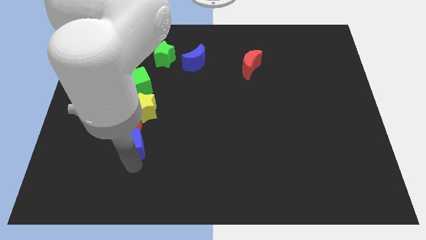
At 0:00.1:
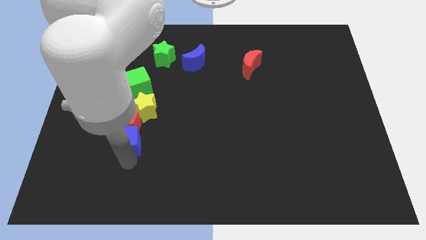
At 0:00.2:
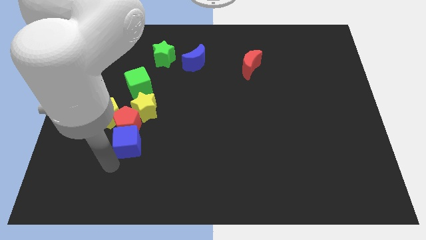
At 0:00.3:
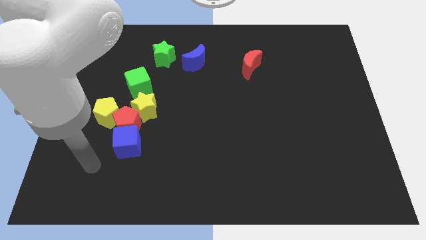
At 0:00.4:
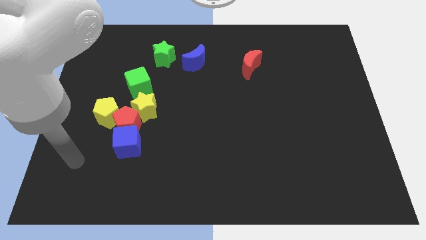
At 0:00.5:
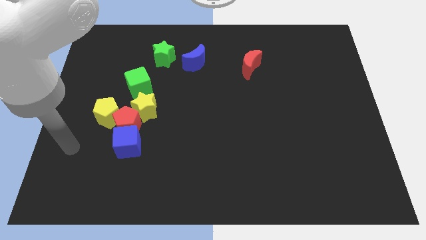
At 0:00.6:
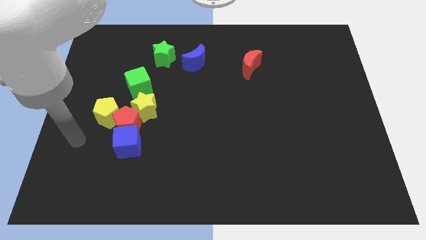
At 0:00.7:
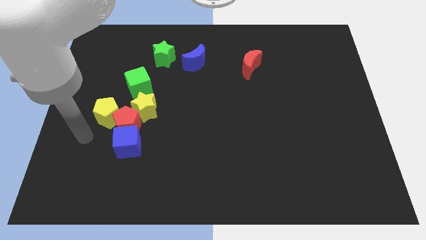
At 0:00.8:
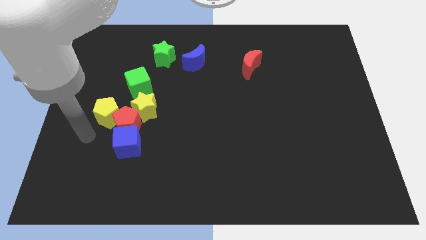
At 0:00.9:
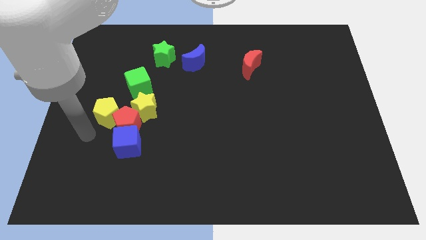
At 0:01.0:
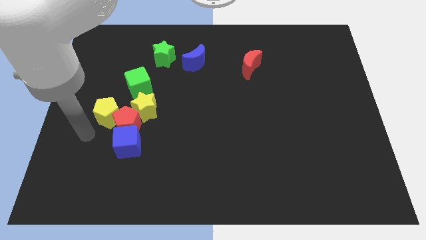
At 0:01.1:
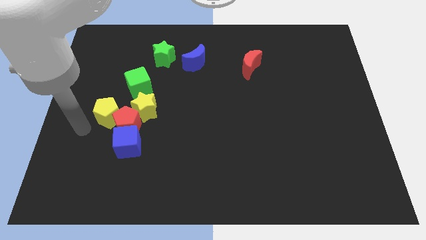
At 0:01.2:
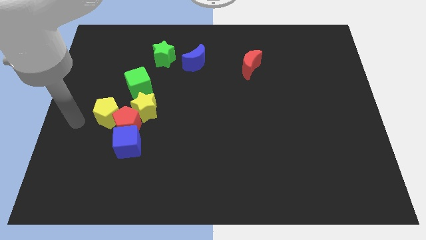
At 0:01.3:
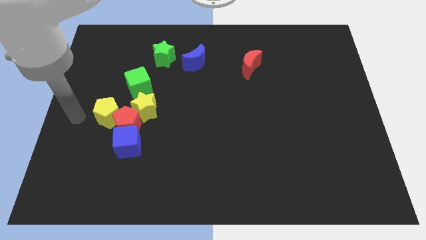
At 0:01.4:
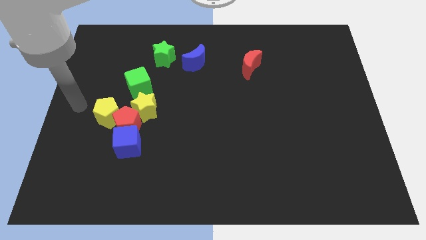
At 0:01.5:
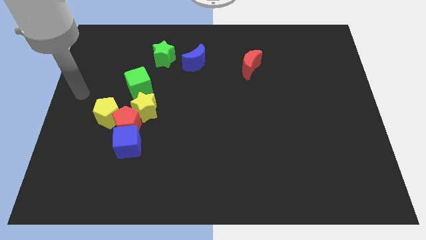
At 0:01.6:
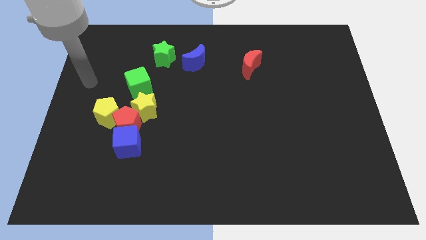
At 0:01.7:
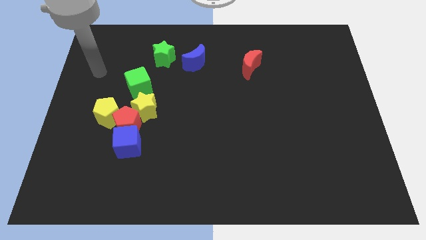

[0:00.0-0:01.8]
put your arm to the left of the green cube

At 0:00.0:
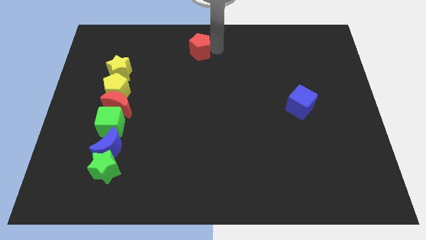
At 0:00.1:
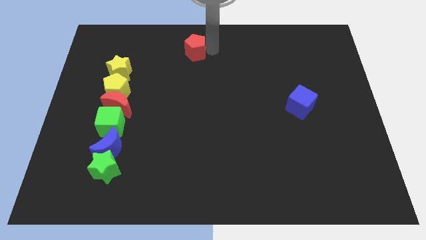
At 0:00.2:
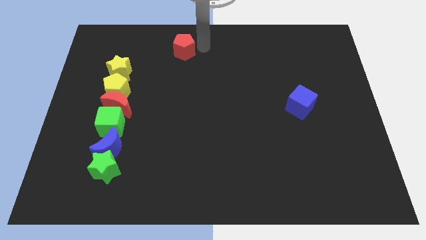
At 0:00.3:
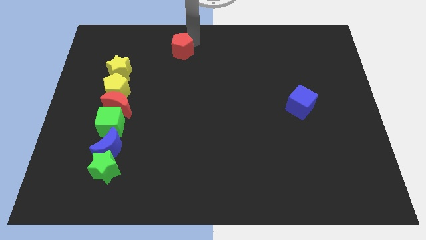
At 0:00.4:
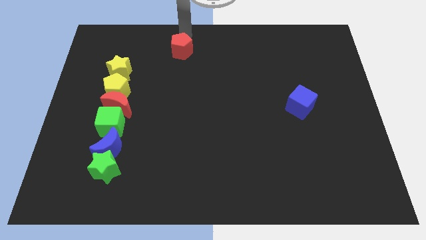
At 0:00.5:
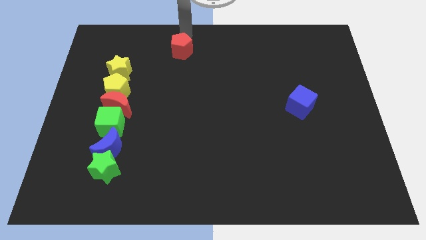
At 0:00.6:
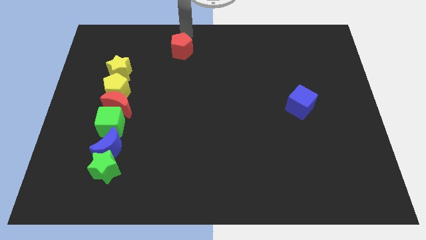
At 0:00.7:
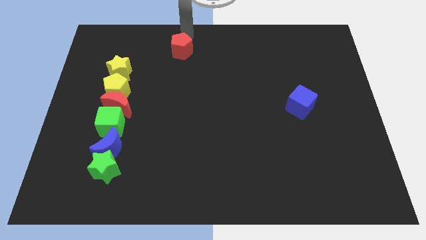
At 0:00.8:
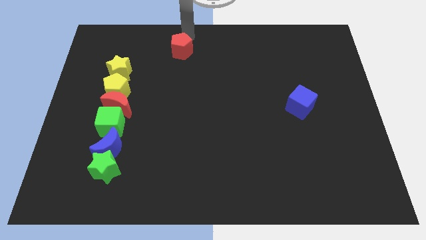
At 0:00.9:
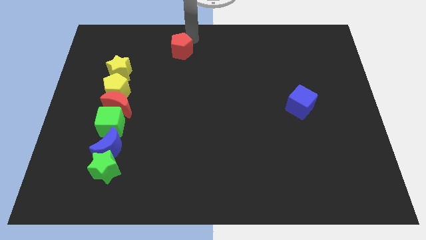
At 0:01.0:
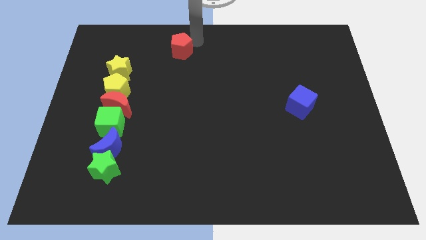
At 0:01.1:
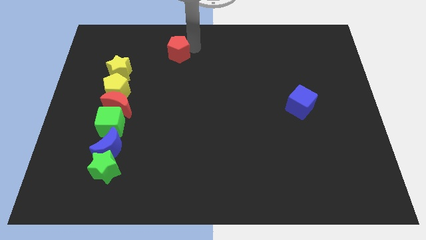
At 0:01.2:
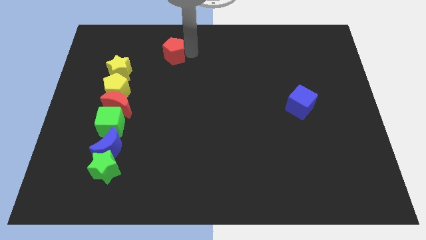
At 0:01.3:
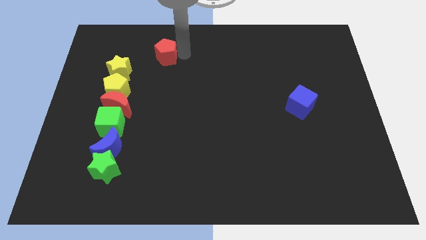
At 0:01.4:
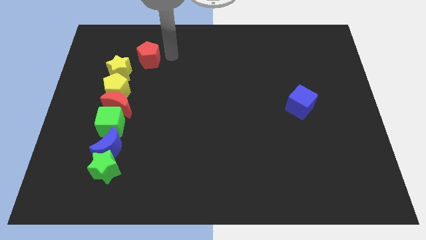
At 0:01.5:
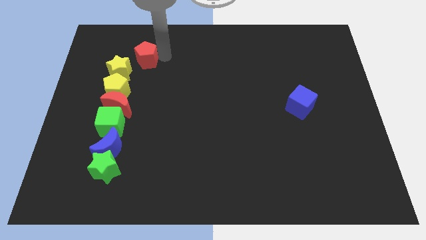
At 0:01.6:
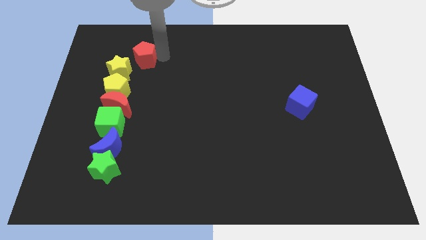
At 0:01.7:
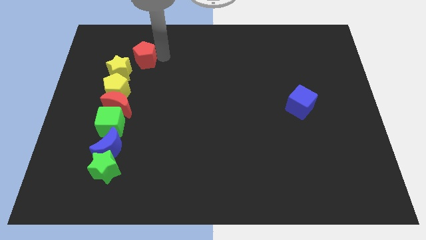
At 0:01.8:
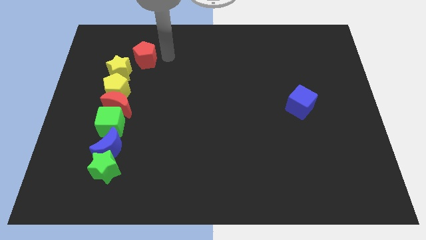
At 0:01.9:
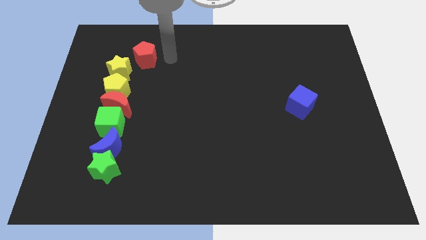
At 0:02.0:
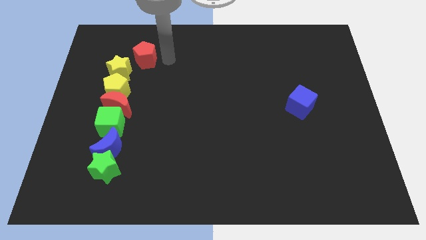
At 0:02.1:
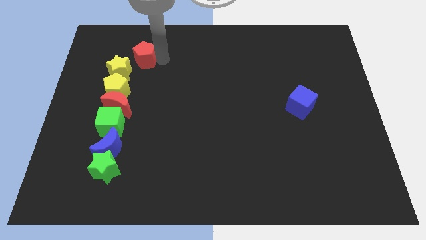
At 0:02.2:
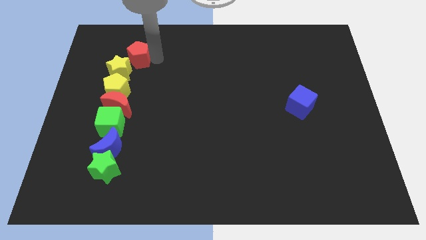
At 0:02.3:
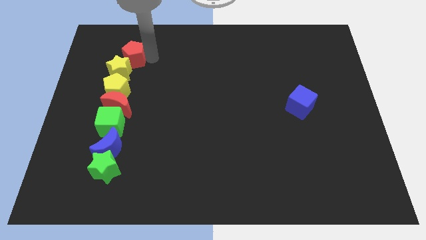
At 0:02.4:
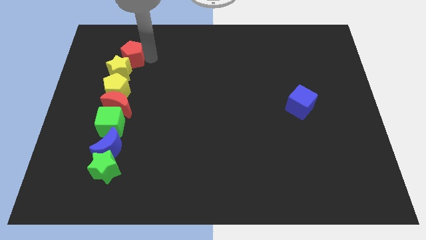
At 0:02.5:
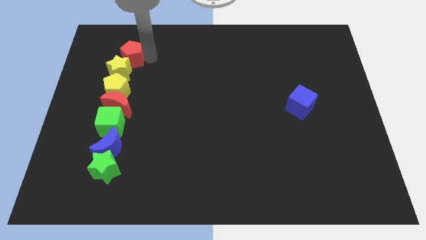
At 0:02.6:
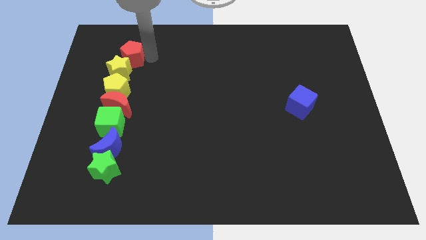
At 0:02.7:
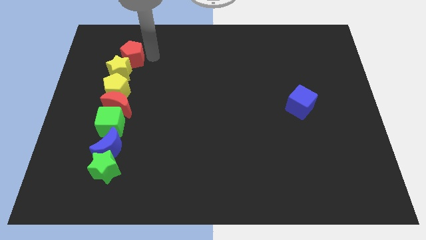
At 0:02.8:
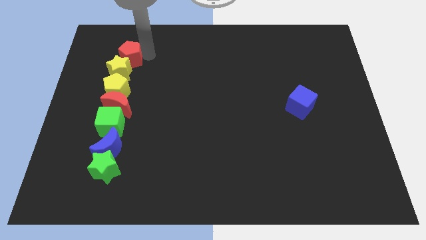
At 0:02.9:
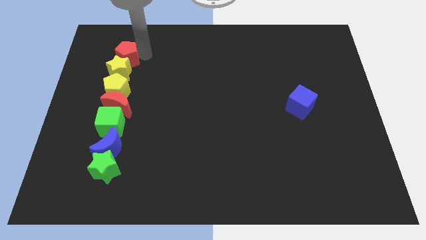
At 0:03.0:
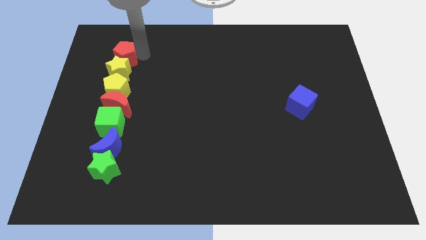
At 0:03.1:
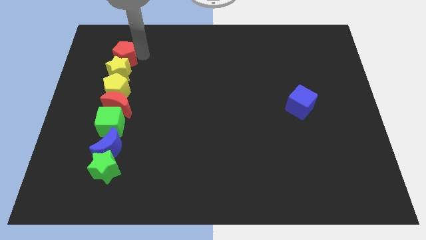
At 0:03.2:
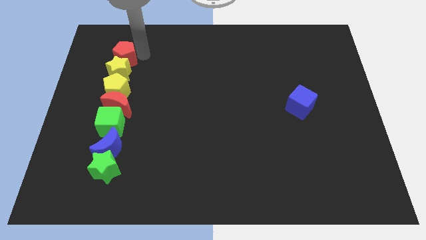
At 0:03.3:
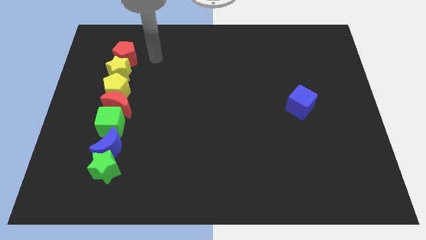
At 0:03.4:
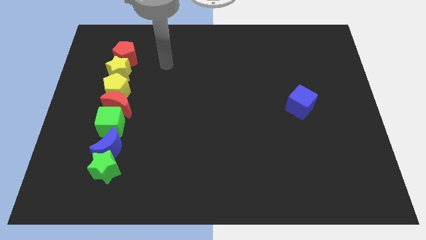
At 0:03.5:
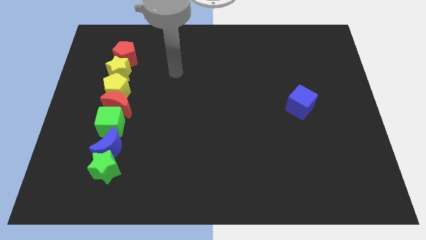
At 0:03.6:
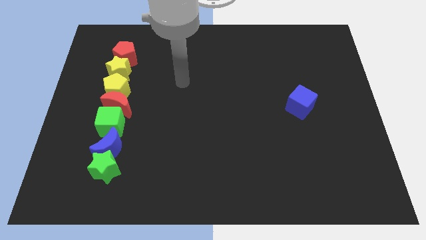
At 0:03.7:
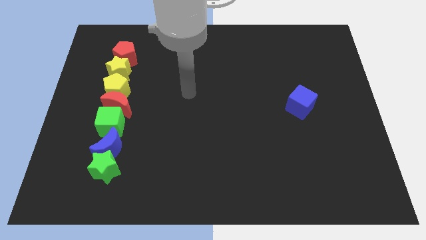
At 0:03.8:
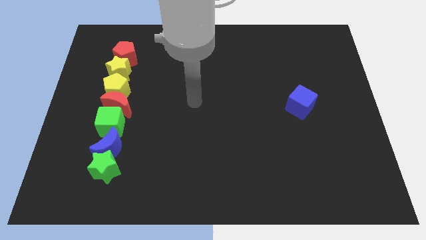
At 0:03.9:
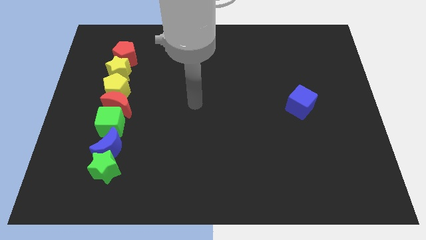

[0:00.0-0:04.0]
push red pentagon above the yellow star

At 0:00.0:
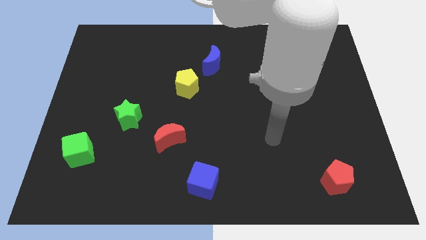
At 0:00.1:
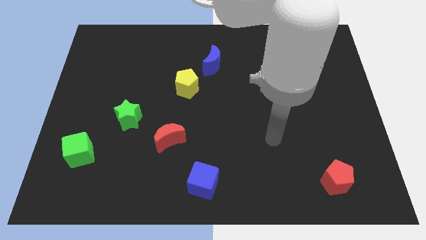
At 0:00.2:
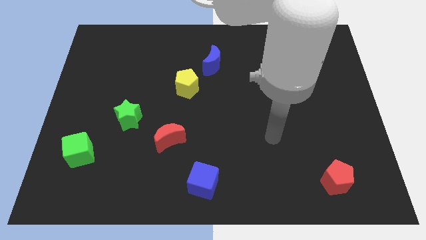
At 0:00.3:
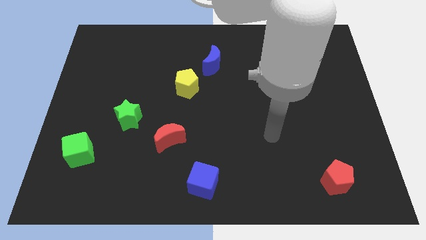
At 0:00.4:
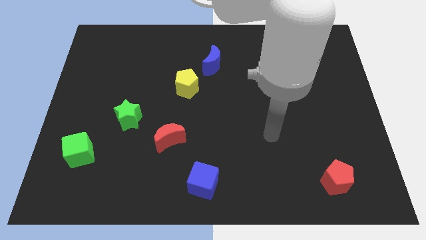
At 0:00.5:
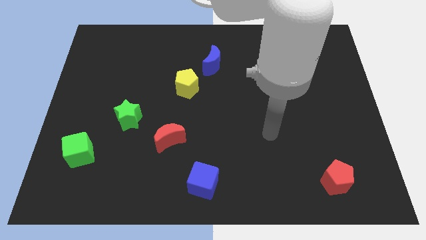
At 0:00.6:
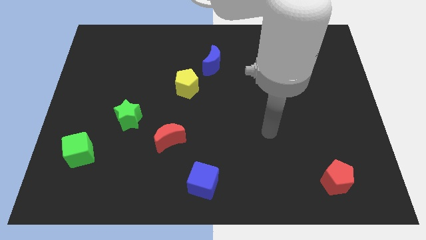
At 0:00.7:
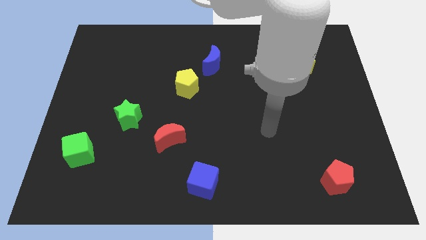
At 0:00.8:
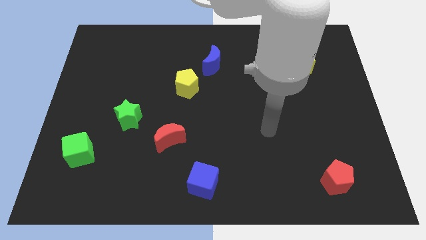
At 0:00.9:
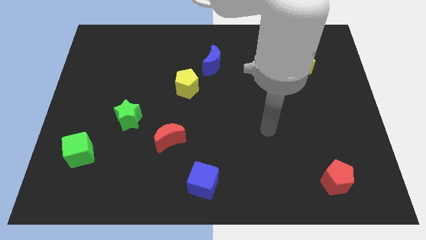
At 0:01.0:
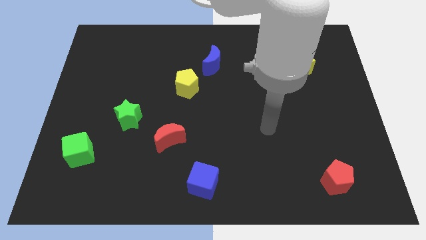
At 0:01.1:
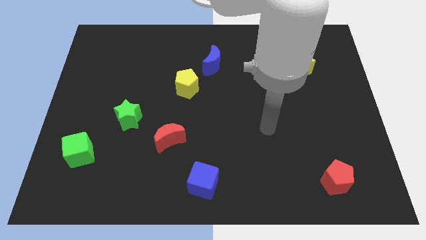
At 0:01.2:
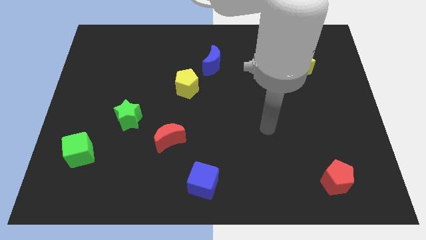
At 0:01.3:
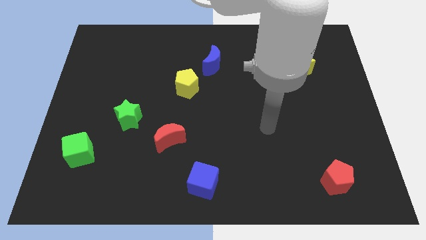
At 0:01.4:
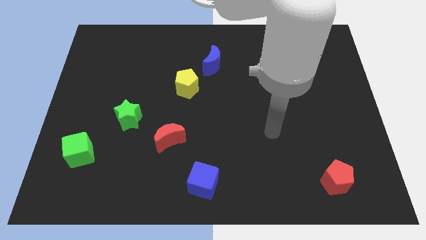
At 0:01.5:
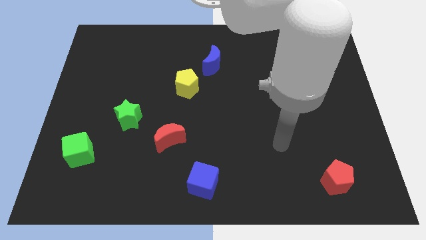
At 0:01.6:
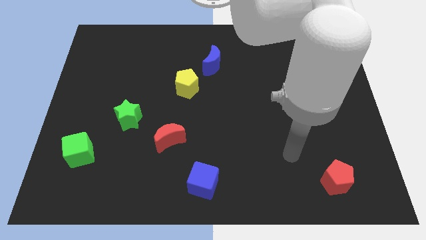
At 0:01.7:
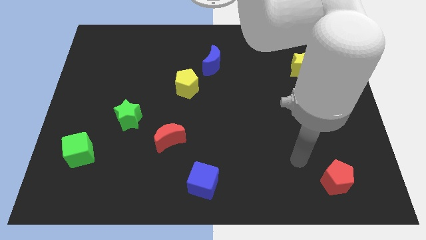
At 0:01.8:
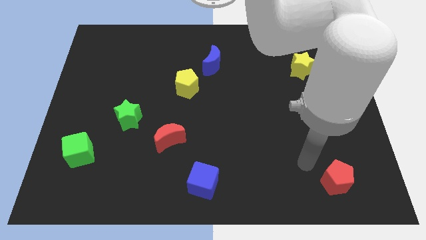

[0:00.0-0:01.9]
place your arm at the top left side of red pentagon

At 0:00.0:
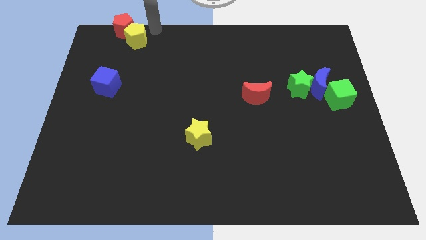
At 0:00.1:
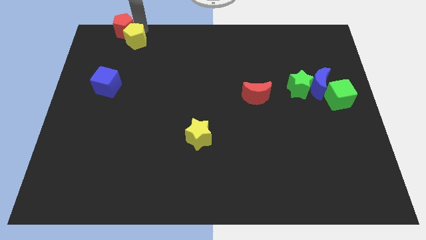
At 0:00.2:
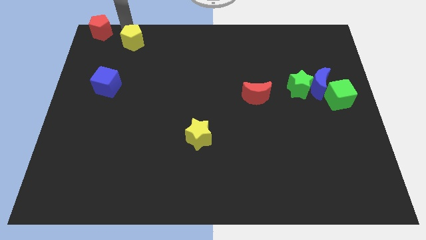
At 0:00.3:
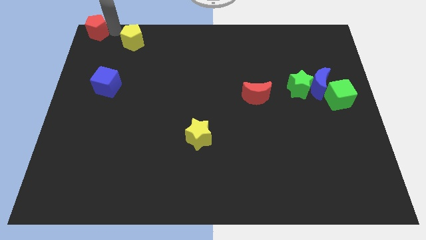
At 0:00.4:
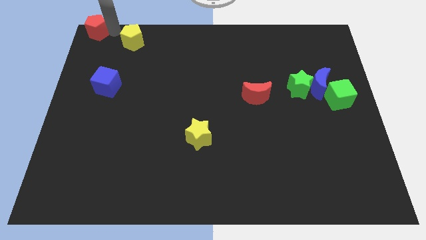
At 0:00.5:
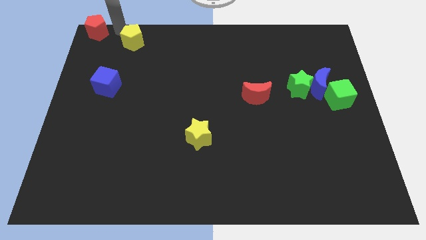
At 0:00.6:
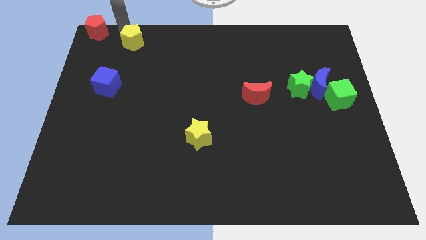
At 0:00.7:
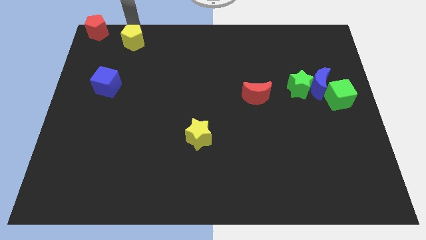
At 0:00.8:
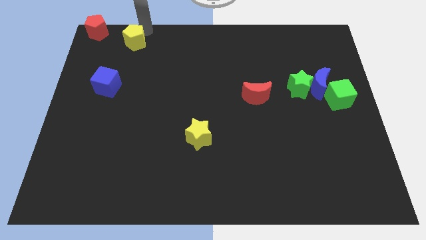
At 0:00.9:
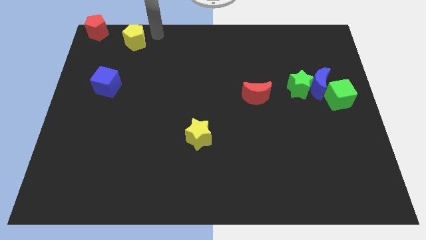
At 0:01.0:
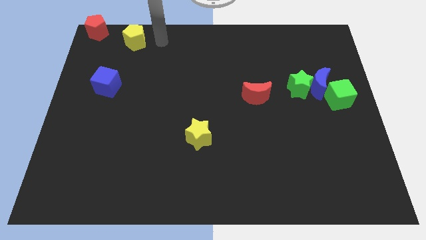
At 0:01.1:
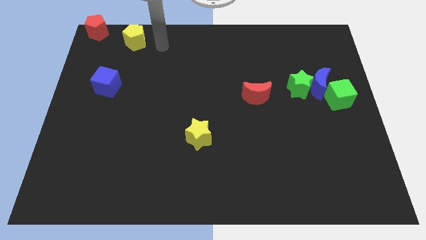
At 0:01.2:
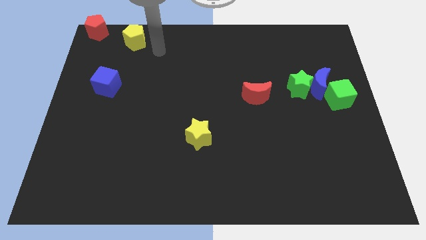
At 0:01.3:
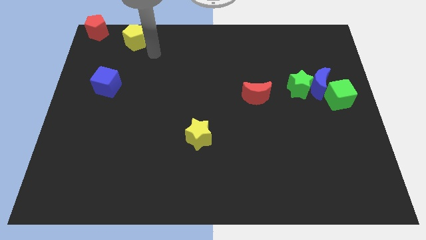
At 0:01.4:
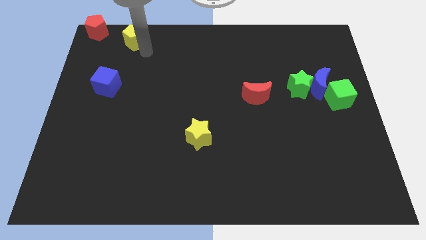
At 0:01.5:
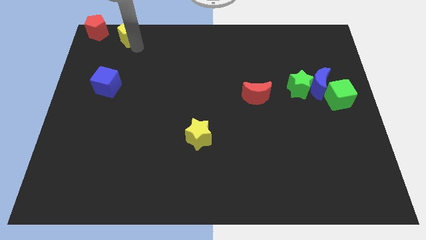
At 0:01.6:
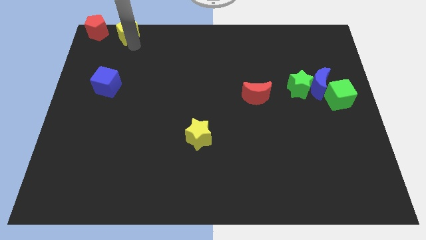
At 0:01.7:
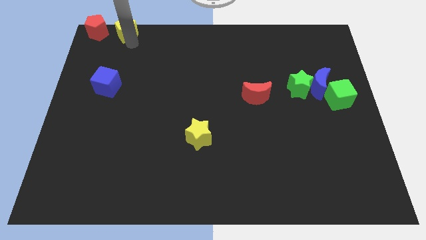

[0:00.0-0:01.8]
move the red pentagon away from the yellow pentagon
